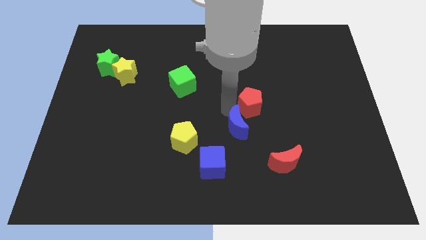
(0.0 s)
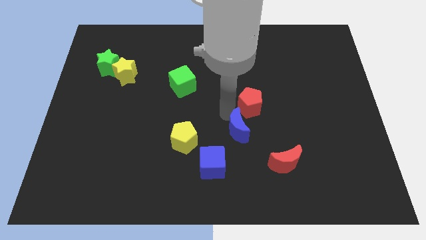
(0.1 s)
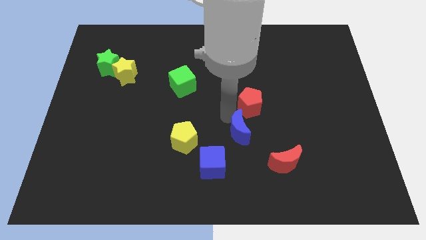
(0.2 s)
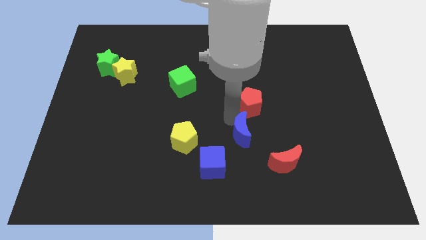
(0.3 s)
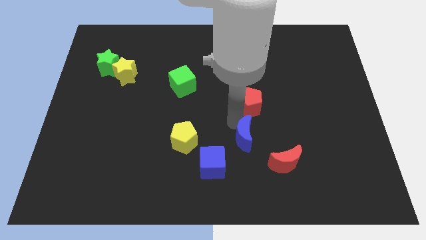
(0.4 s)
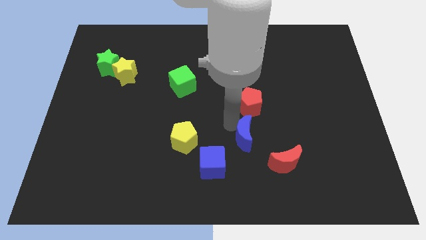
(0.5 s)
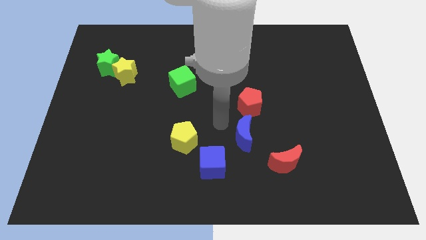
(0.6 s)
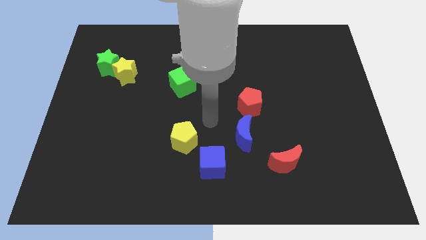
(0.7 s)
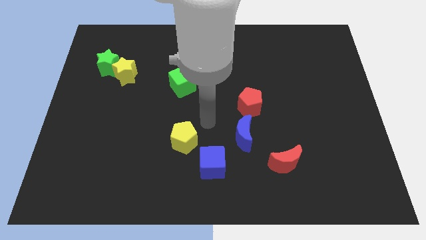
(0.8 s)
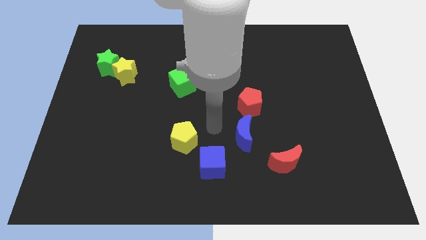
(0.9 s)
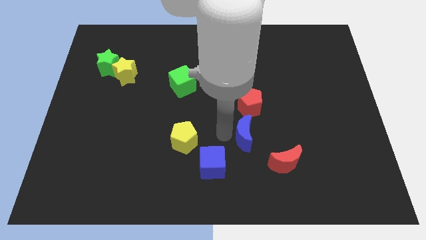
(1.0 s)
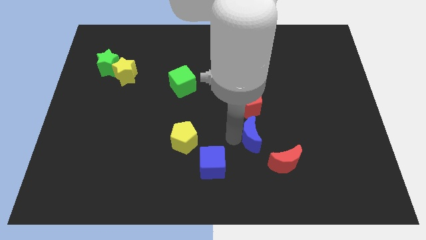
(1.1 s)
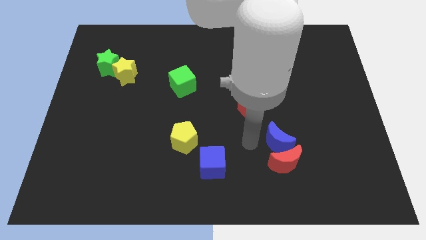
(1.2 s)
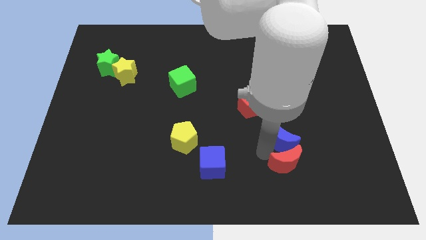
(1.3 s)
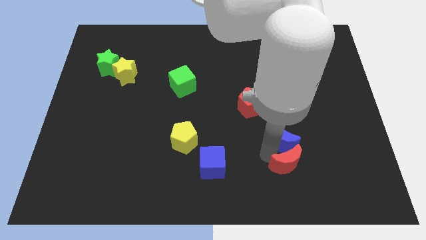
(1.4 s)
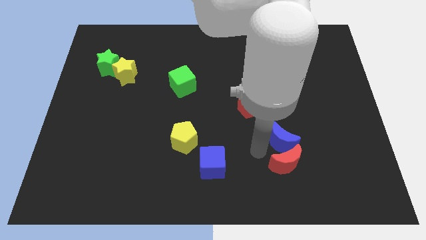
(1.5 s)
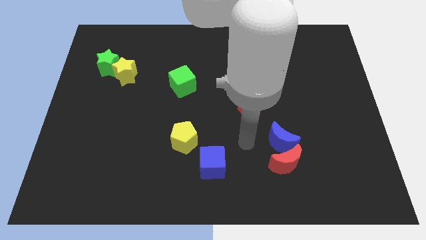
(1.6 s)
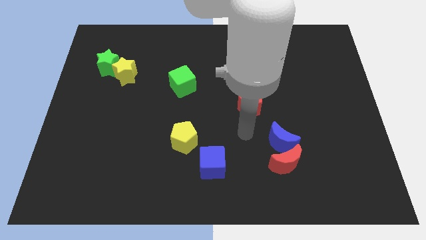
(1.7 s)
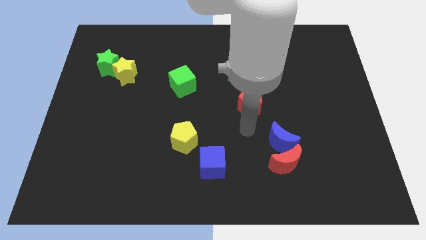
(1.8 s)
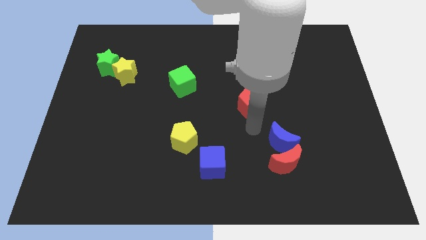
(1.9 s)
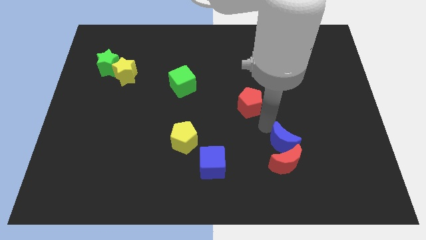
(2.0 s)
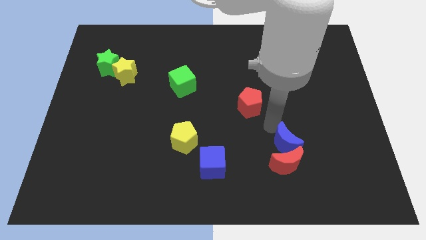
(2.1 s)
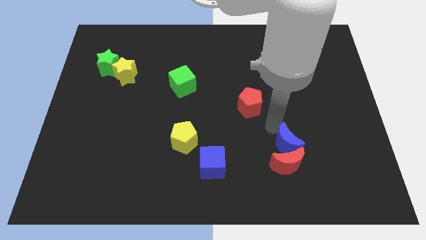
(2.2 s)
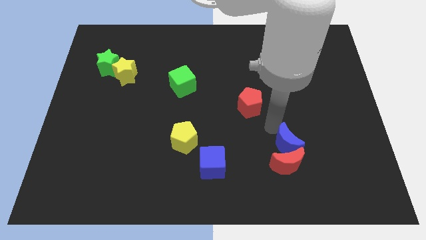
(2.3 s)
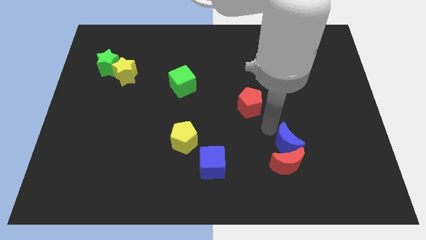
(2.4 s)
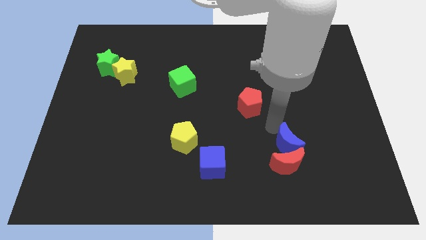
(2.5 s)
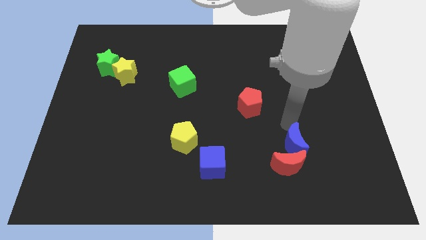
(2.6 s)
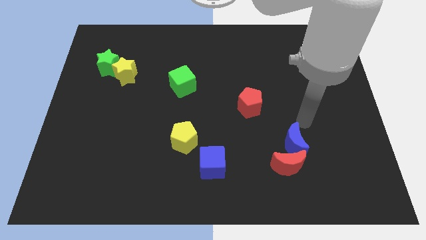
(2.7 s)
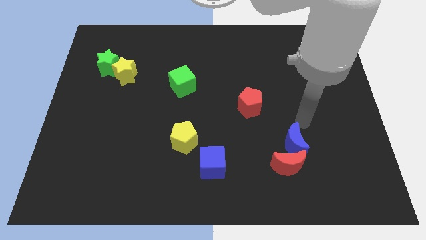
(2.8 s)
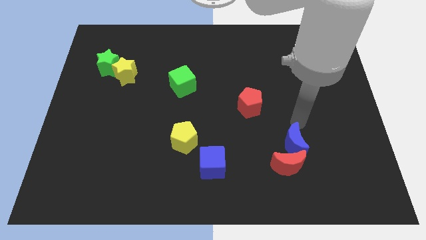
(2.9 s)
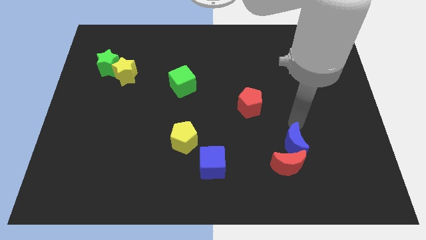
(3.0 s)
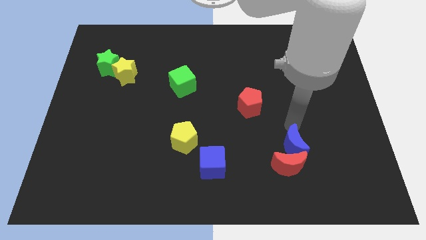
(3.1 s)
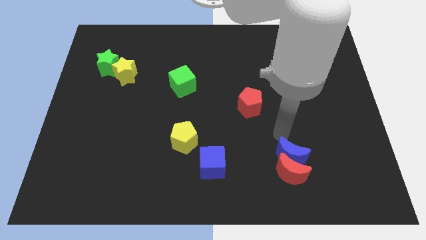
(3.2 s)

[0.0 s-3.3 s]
push the blue crescent into red crescent

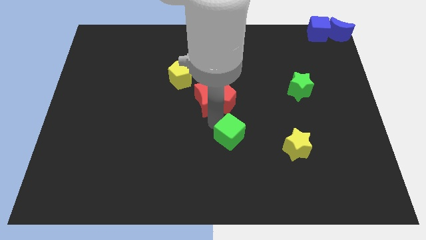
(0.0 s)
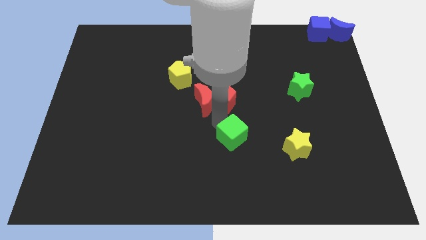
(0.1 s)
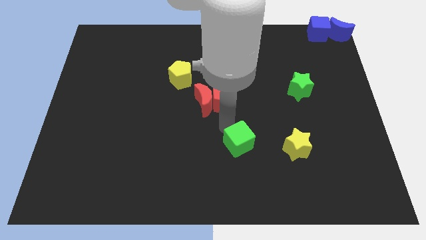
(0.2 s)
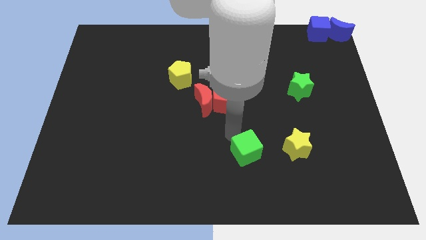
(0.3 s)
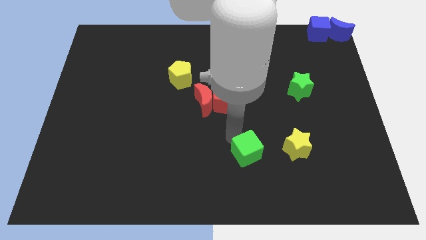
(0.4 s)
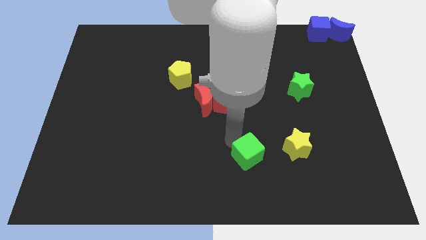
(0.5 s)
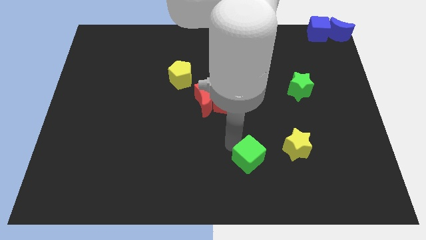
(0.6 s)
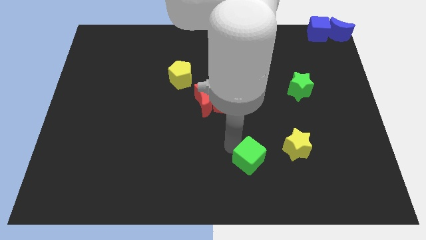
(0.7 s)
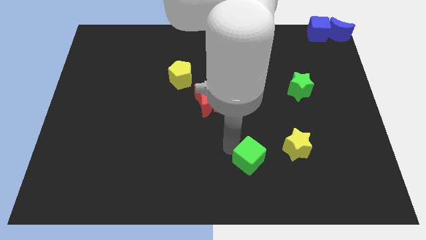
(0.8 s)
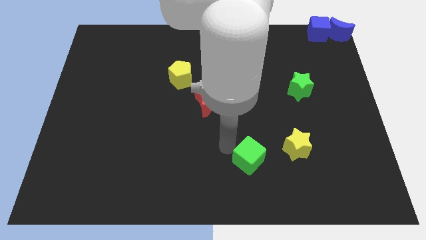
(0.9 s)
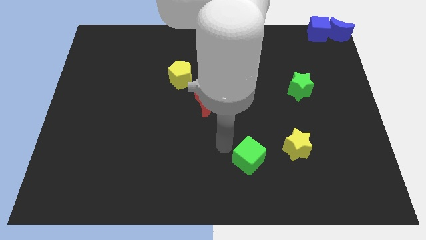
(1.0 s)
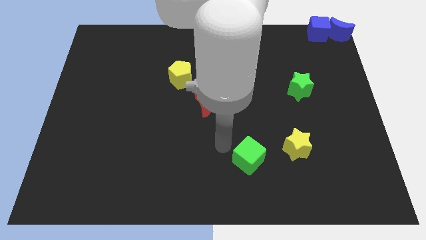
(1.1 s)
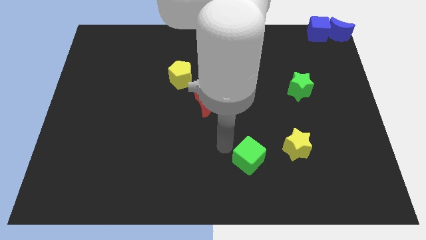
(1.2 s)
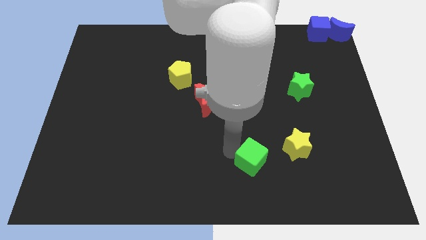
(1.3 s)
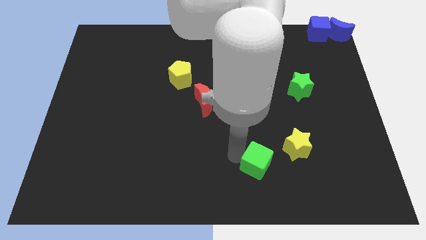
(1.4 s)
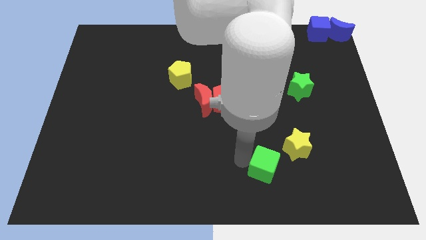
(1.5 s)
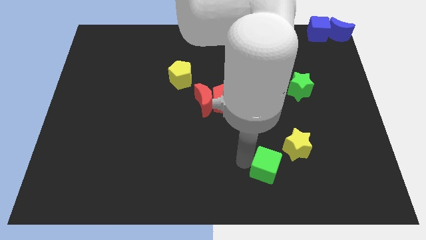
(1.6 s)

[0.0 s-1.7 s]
move the green cube to the bottom left of the yellow star

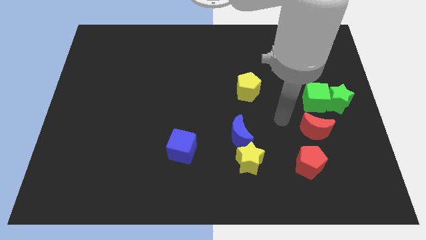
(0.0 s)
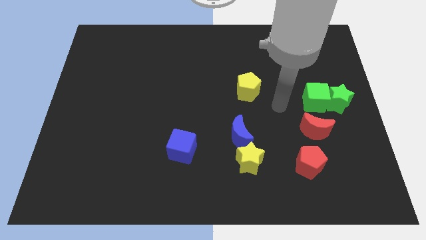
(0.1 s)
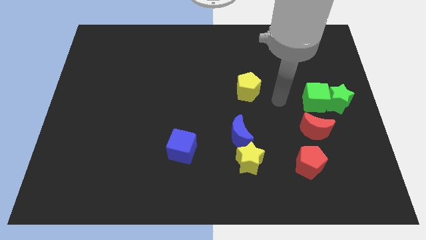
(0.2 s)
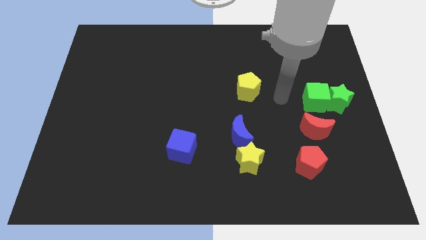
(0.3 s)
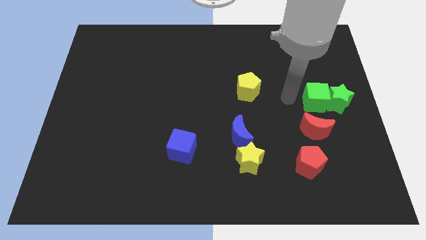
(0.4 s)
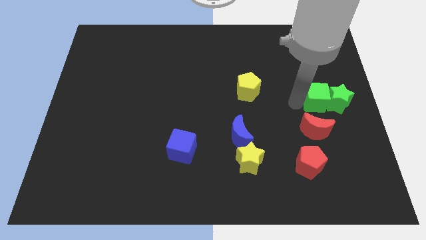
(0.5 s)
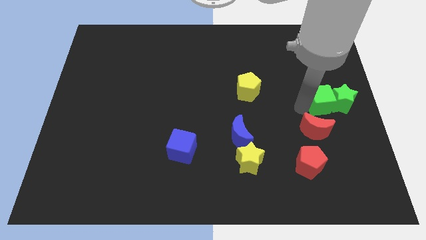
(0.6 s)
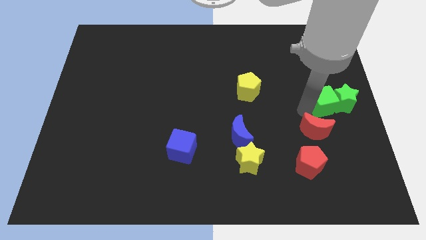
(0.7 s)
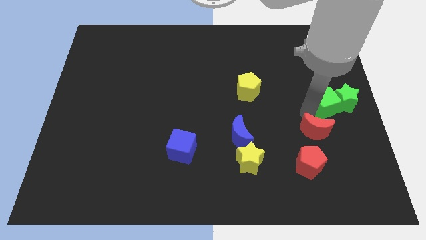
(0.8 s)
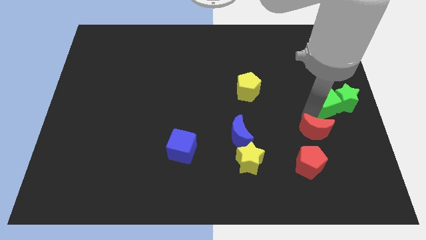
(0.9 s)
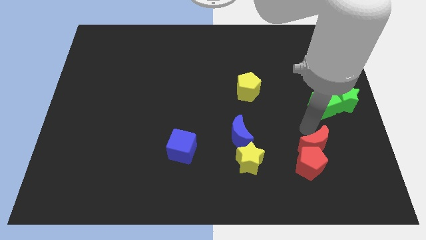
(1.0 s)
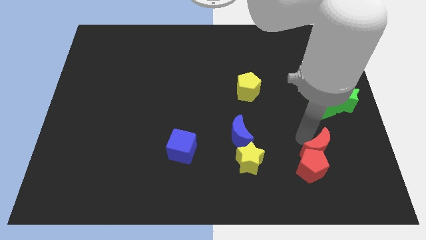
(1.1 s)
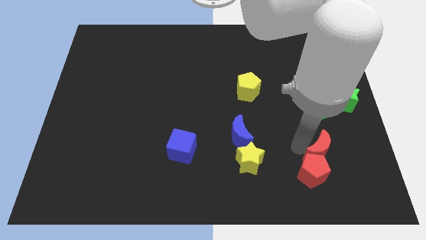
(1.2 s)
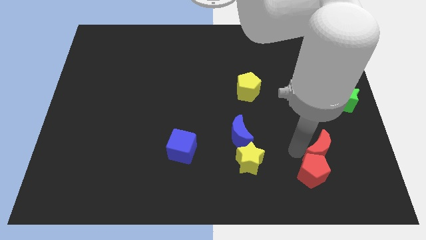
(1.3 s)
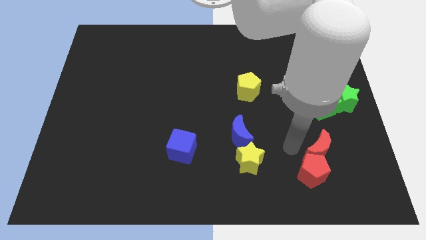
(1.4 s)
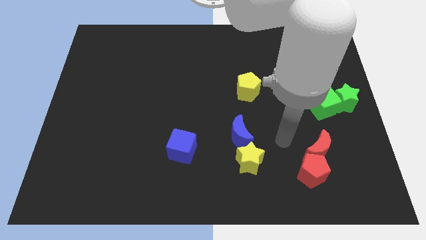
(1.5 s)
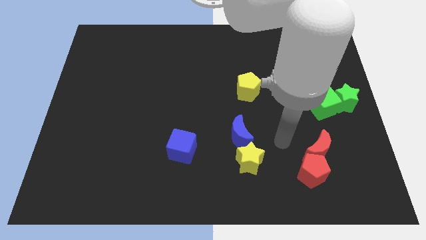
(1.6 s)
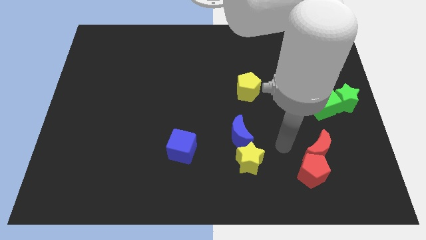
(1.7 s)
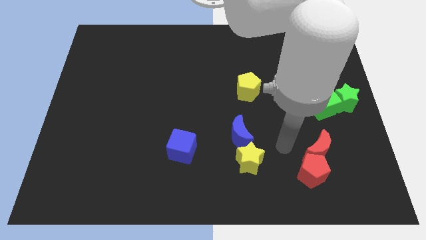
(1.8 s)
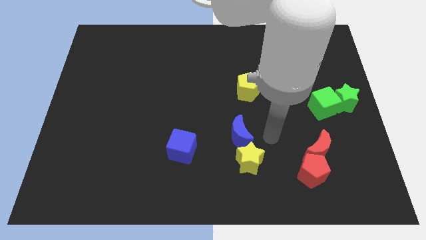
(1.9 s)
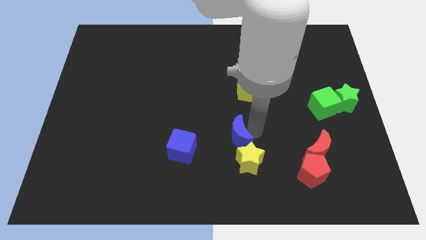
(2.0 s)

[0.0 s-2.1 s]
move the red moon on the top of the red pentagon

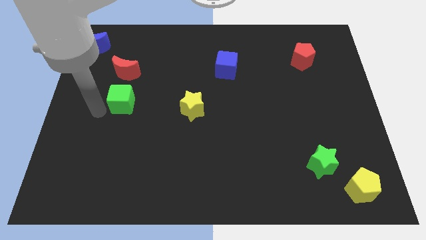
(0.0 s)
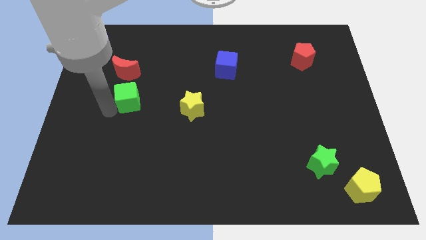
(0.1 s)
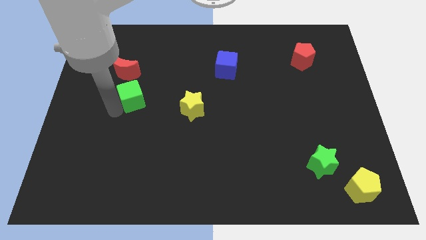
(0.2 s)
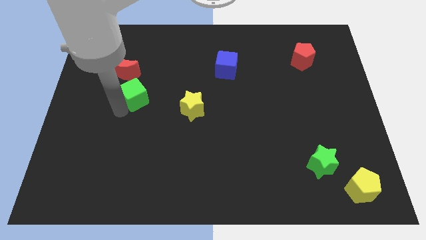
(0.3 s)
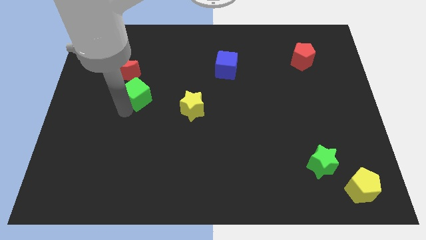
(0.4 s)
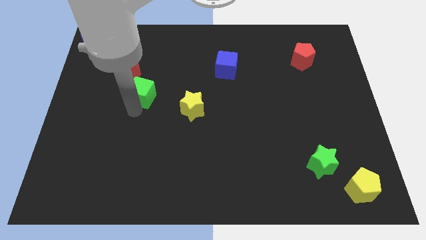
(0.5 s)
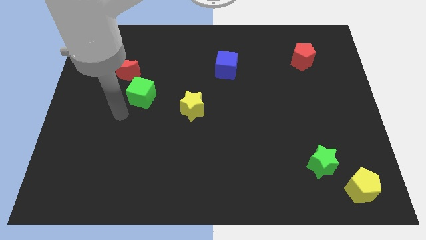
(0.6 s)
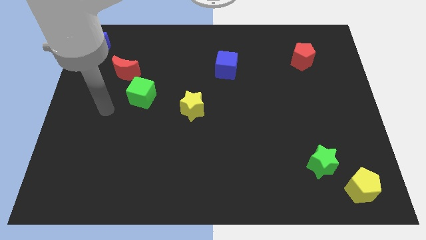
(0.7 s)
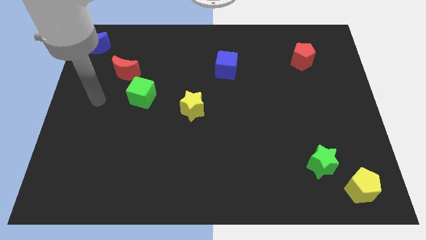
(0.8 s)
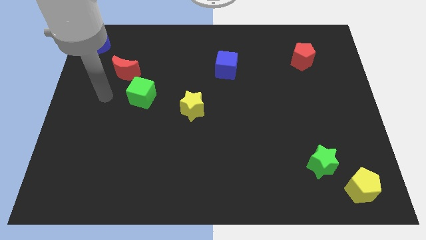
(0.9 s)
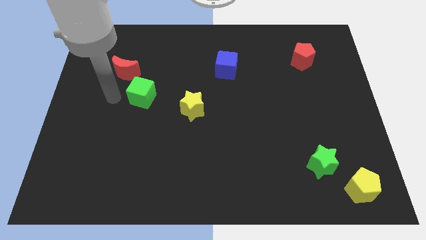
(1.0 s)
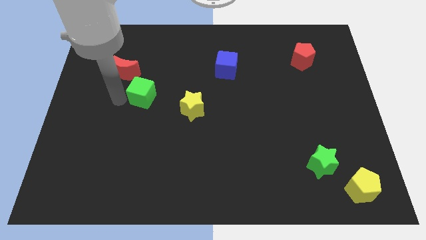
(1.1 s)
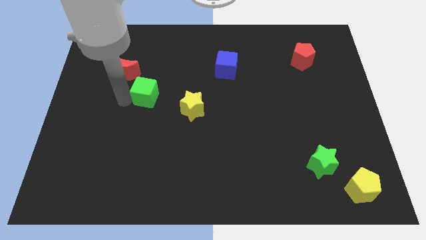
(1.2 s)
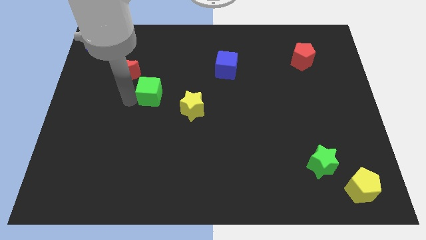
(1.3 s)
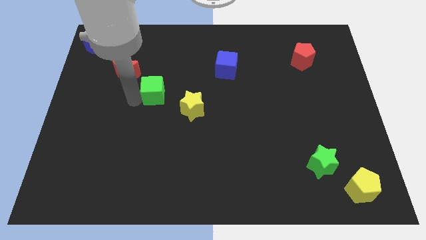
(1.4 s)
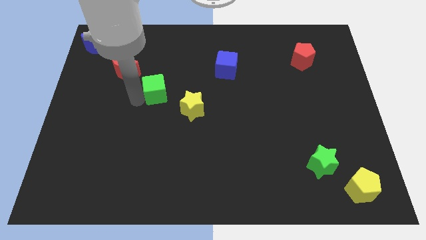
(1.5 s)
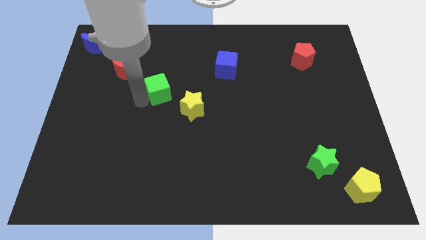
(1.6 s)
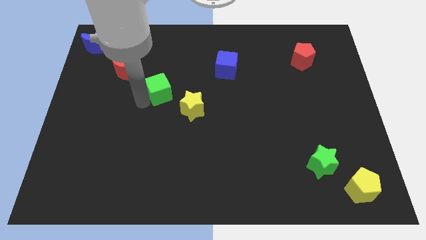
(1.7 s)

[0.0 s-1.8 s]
place the green cube in between the red crescent and yellow star
